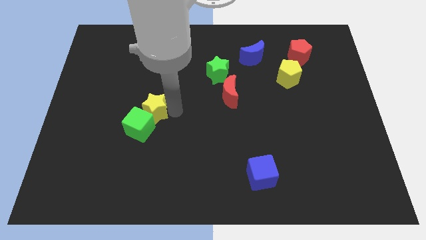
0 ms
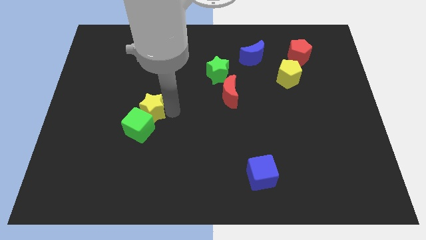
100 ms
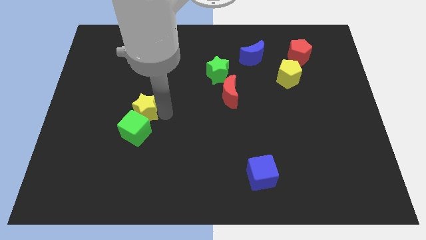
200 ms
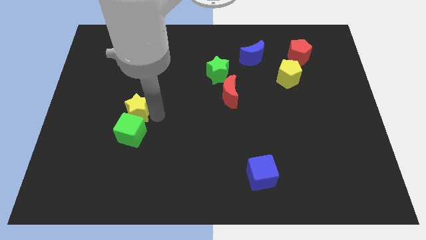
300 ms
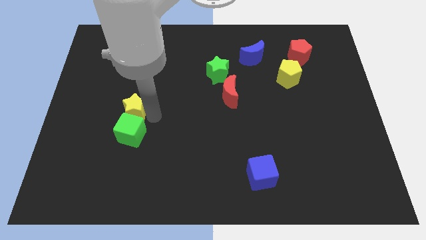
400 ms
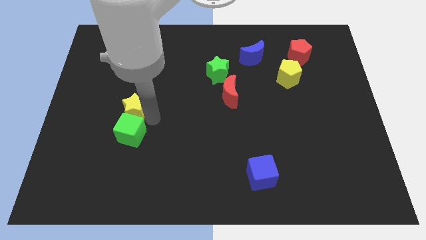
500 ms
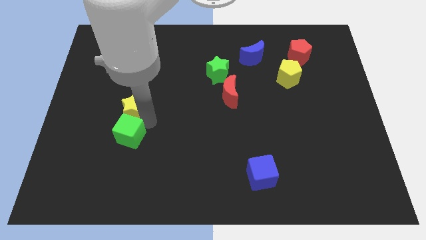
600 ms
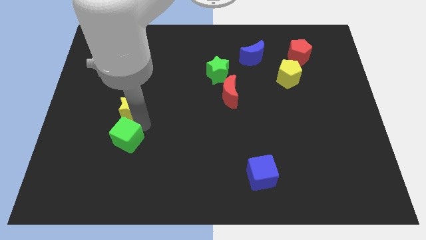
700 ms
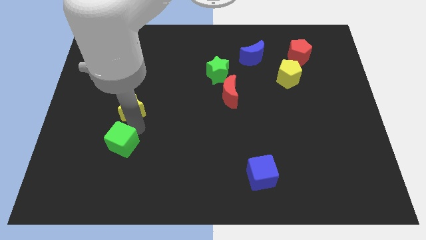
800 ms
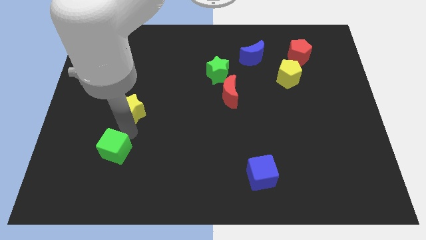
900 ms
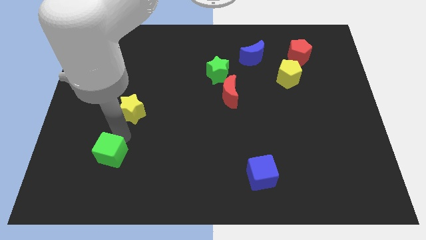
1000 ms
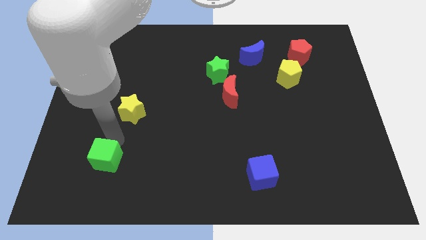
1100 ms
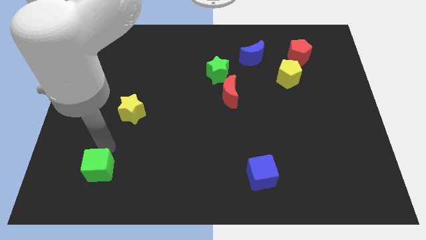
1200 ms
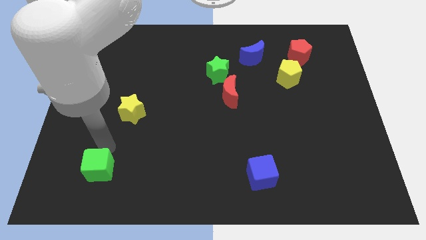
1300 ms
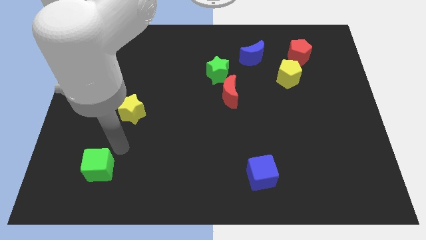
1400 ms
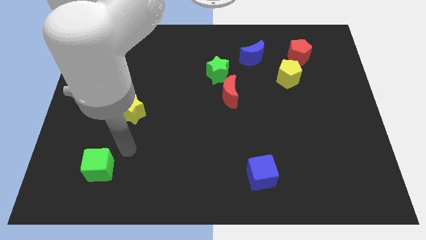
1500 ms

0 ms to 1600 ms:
separate the green cube and the yellow star

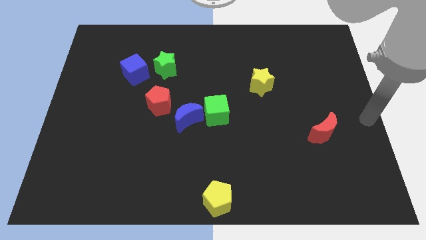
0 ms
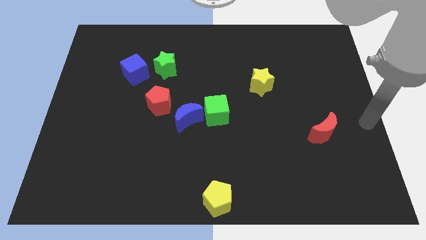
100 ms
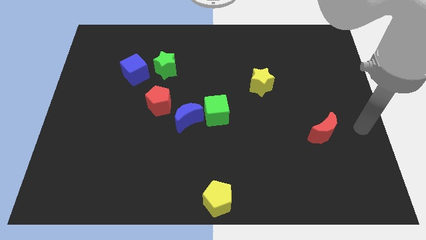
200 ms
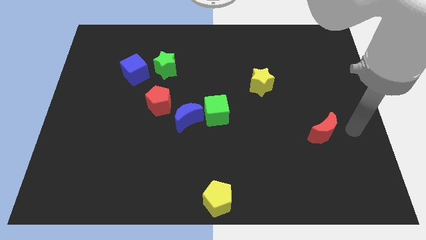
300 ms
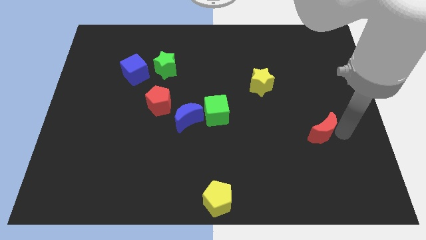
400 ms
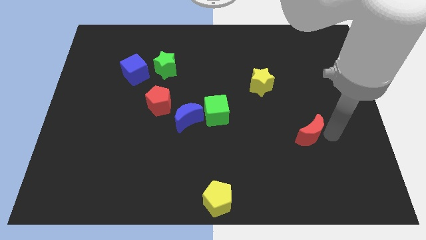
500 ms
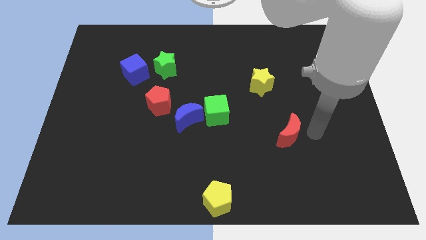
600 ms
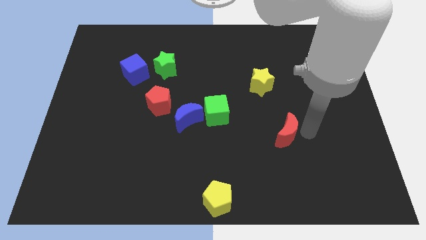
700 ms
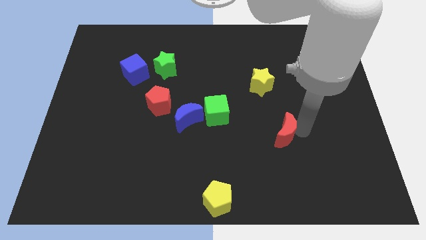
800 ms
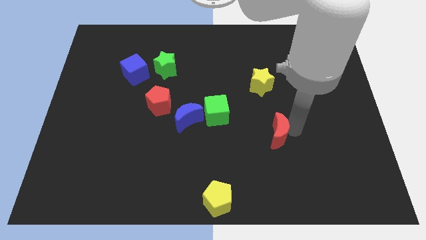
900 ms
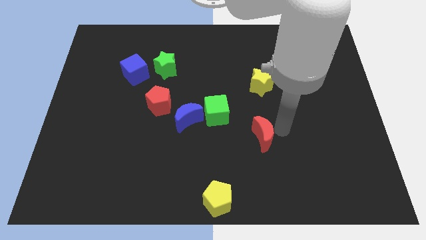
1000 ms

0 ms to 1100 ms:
push the red crescent to the left

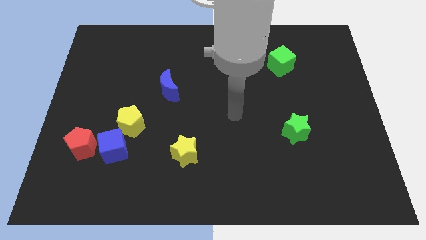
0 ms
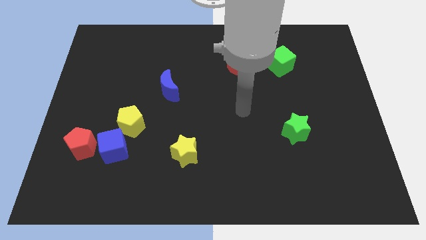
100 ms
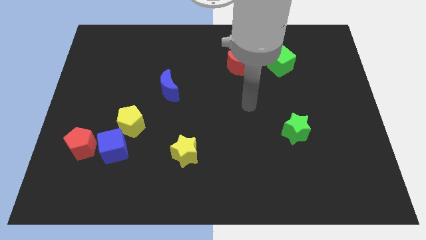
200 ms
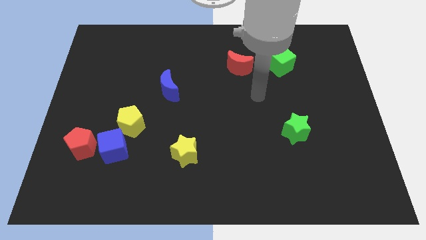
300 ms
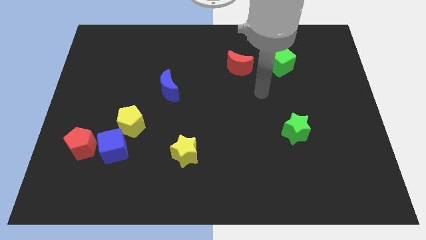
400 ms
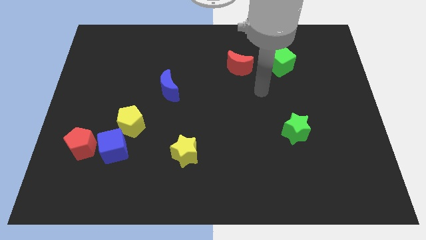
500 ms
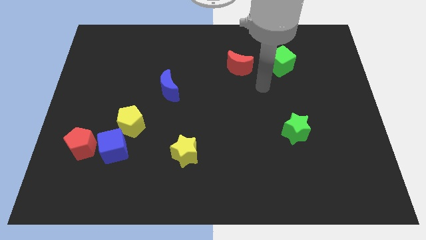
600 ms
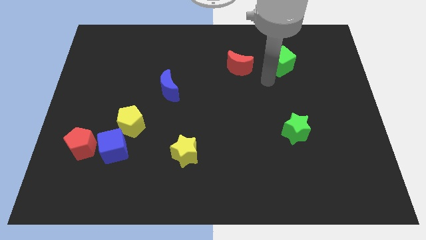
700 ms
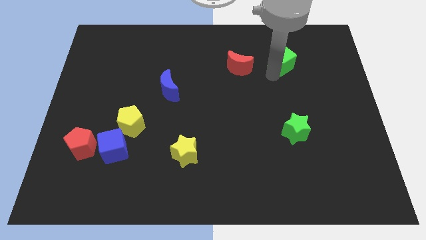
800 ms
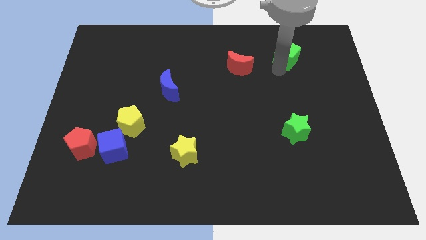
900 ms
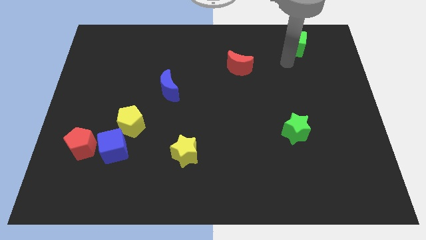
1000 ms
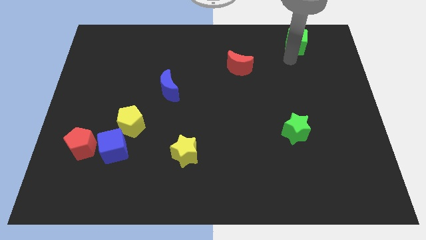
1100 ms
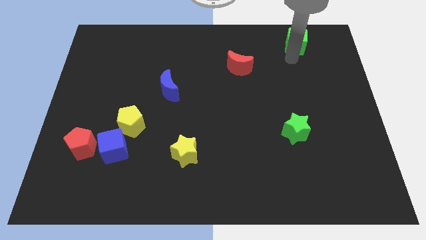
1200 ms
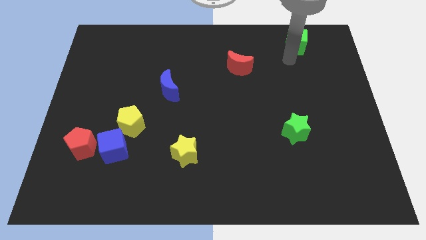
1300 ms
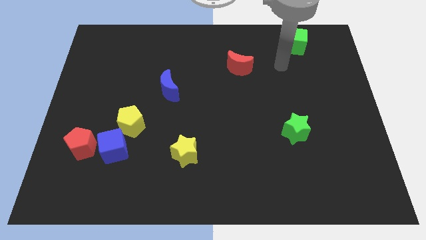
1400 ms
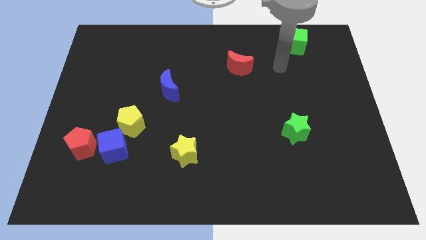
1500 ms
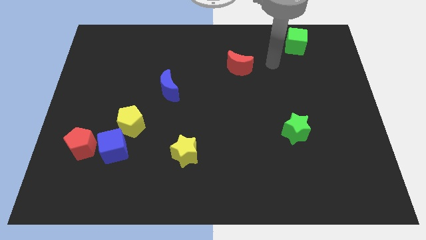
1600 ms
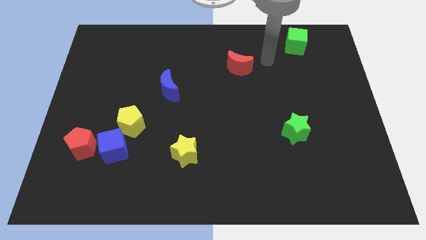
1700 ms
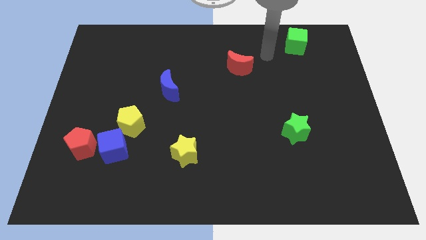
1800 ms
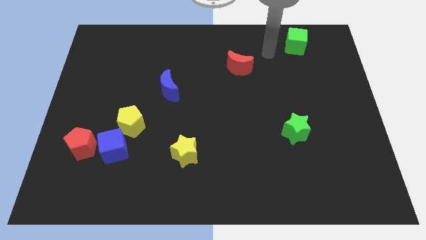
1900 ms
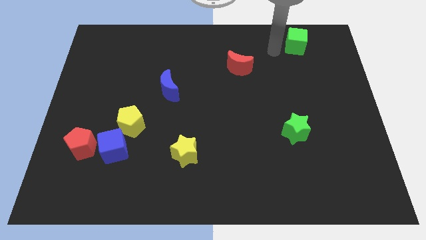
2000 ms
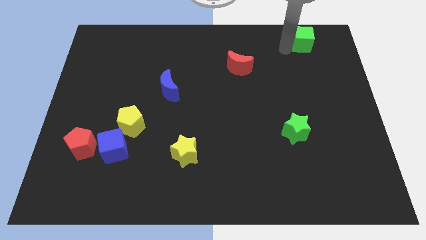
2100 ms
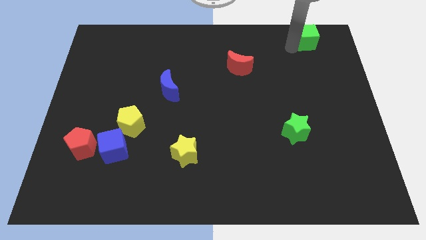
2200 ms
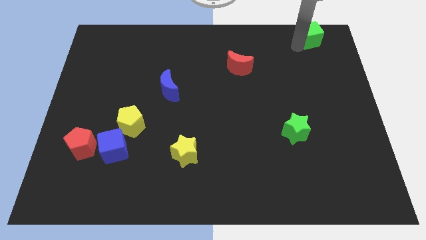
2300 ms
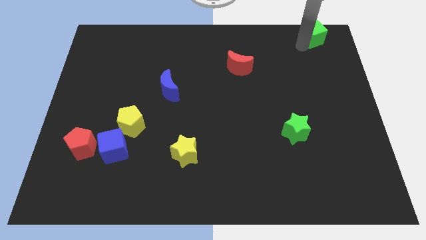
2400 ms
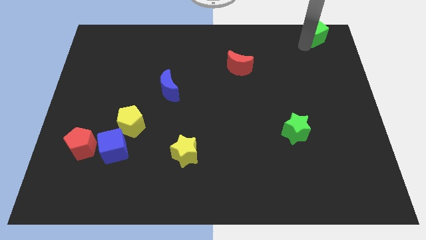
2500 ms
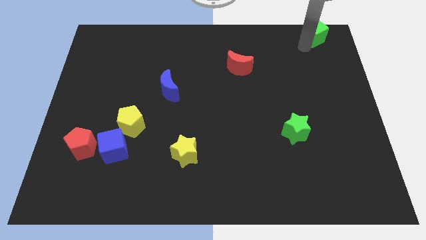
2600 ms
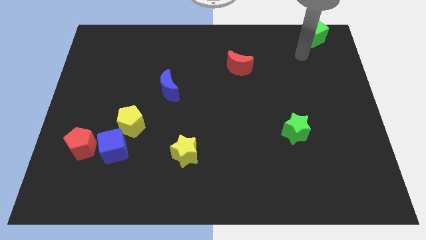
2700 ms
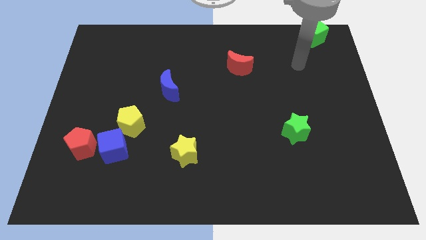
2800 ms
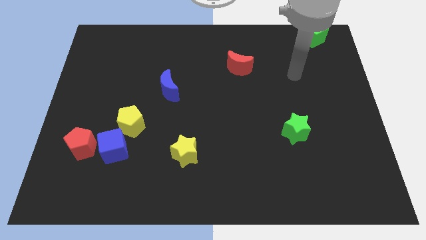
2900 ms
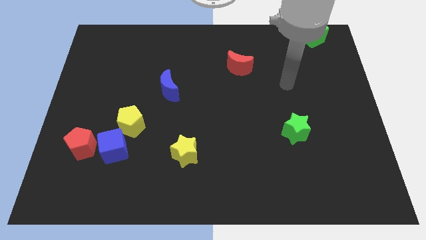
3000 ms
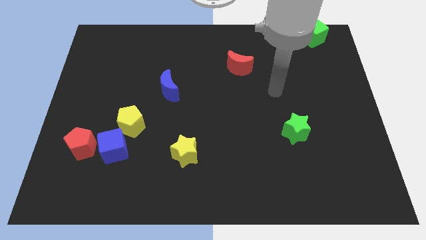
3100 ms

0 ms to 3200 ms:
move the green cube to the top right of the board

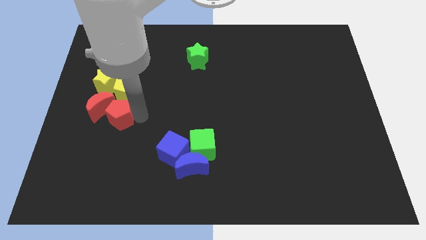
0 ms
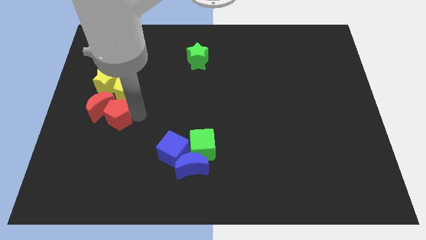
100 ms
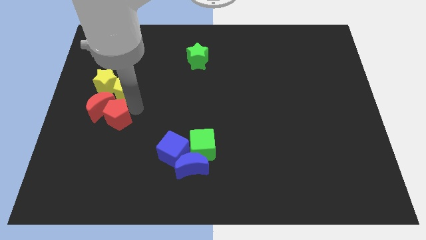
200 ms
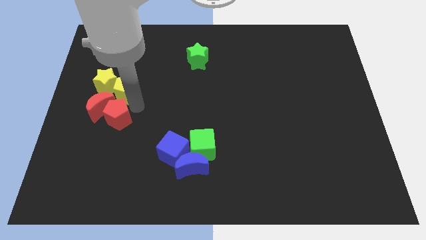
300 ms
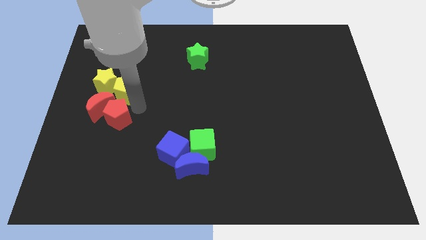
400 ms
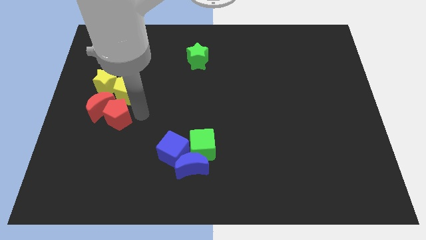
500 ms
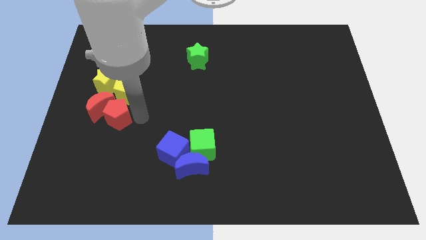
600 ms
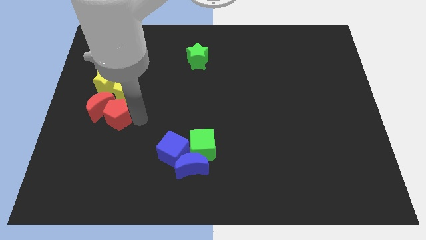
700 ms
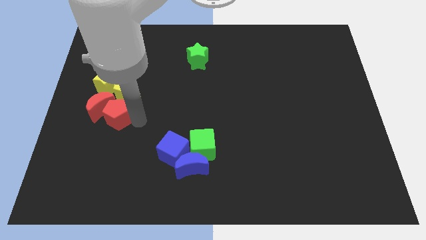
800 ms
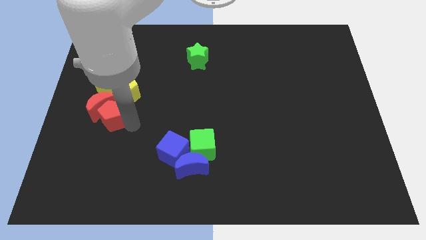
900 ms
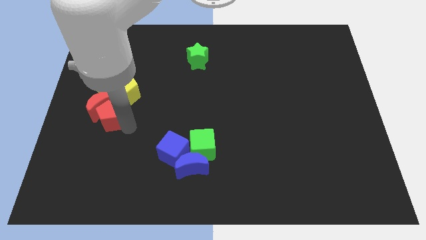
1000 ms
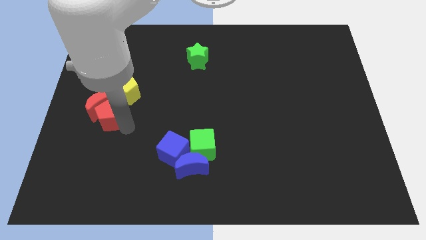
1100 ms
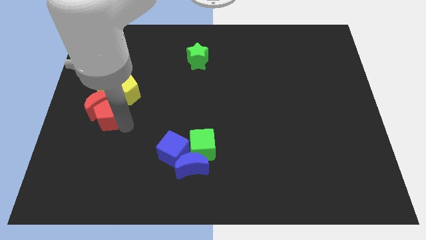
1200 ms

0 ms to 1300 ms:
push the red pentagon into the red crescent

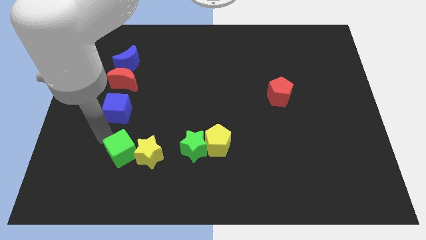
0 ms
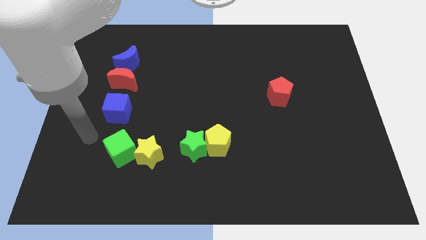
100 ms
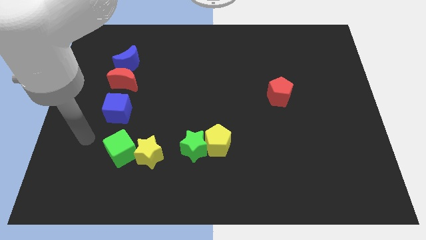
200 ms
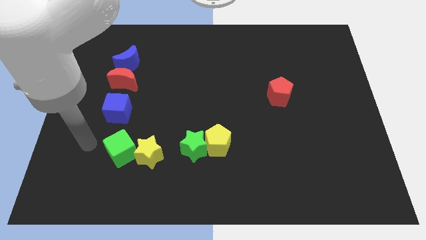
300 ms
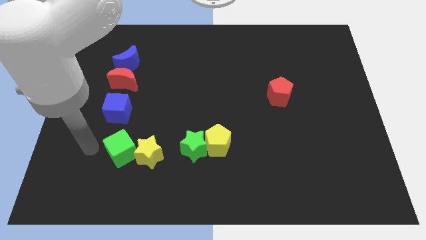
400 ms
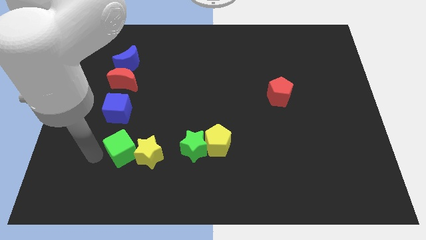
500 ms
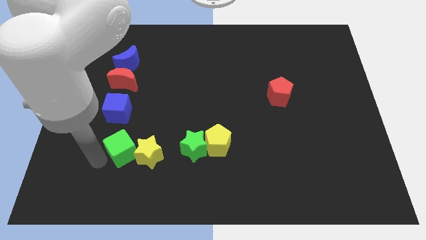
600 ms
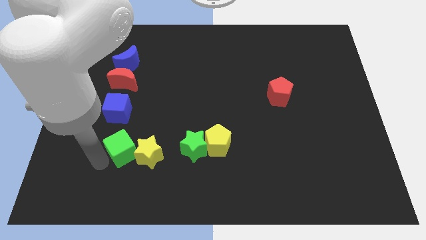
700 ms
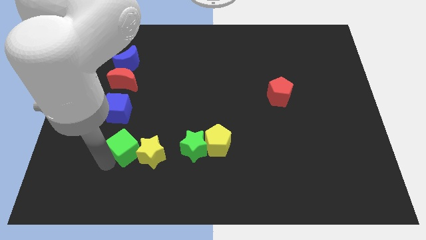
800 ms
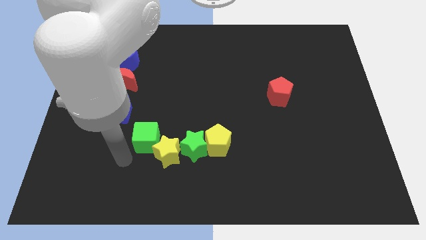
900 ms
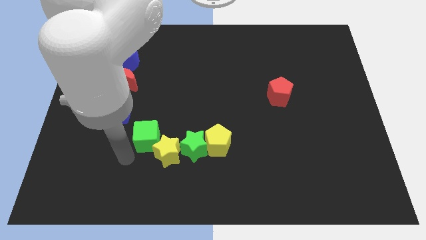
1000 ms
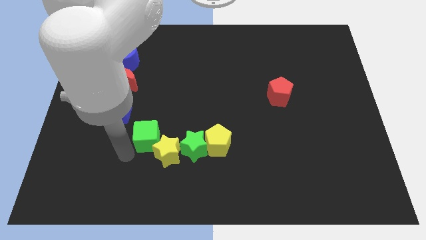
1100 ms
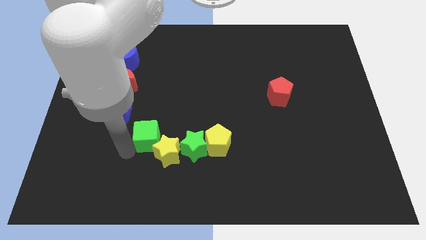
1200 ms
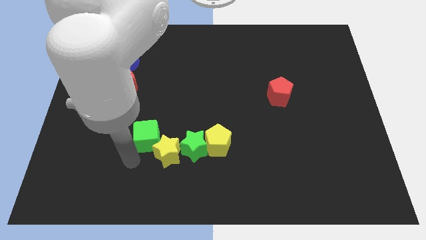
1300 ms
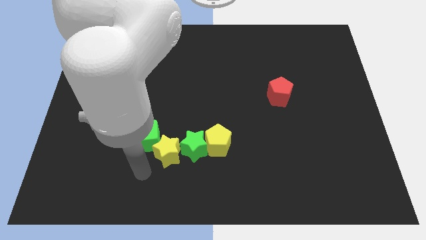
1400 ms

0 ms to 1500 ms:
push yellow star with the help of green cube to the left side of green star

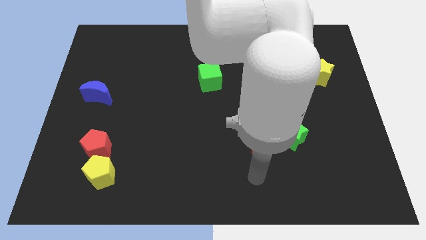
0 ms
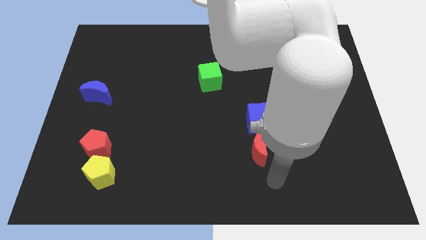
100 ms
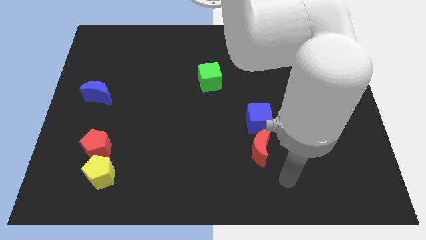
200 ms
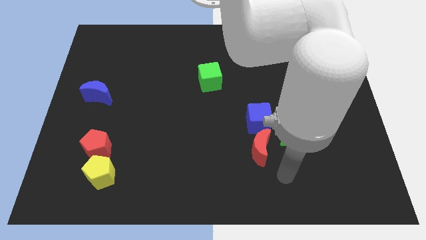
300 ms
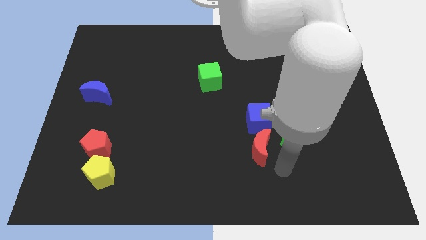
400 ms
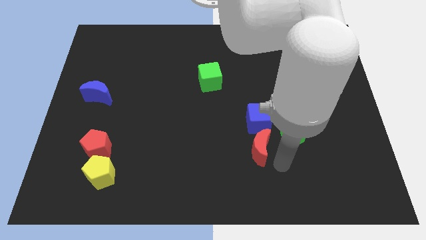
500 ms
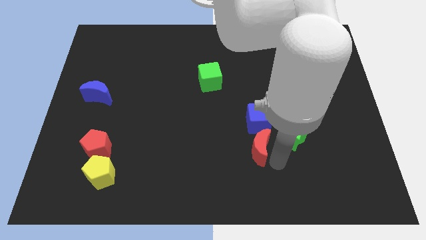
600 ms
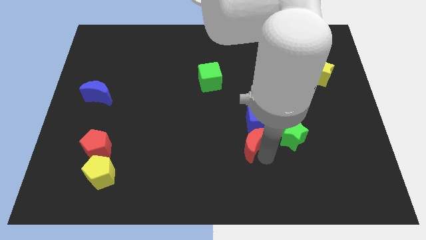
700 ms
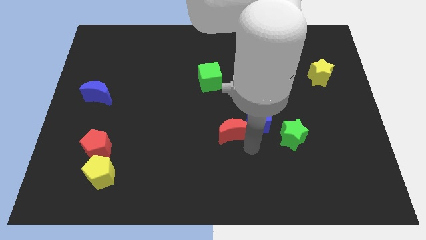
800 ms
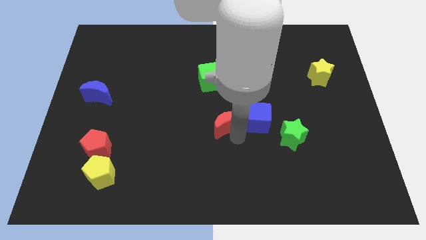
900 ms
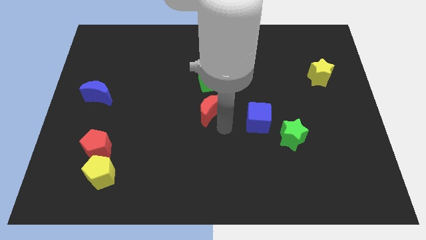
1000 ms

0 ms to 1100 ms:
separate the red crescent from the blue cube
